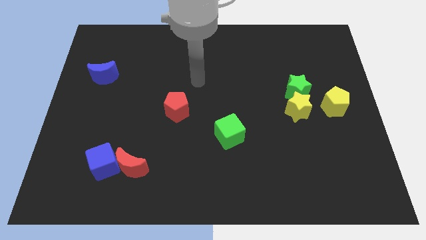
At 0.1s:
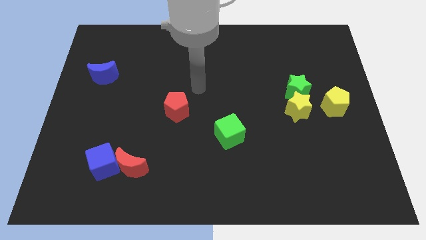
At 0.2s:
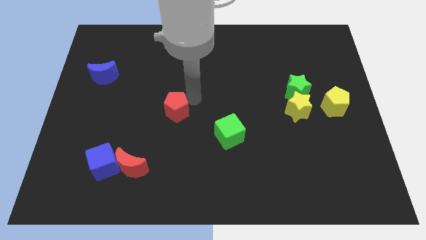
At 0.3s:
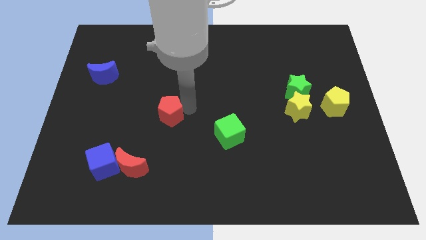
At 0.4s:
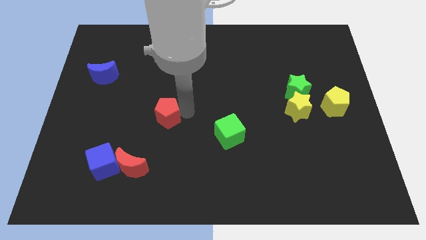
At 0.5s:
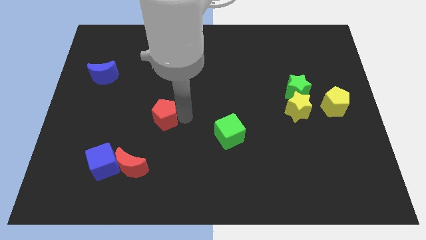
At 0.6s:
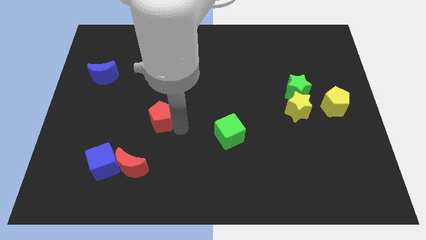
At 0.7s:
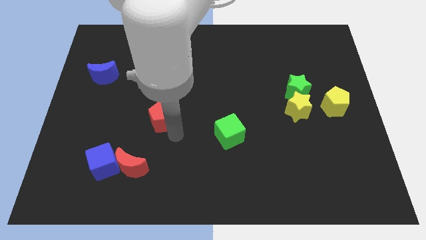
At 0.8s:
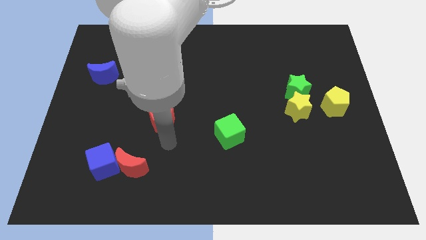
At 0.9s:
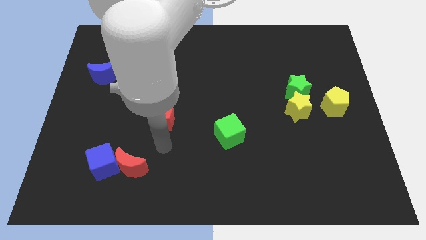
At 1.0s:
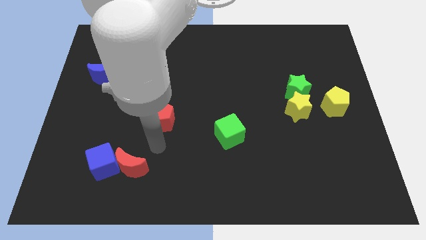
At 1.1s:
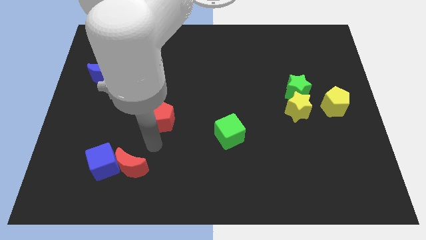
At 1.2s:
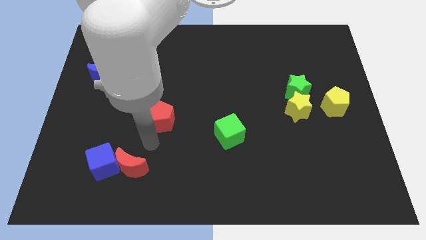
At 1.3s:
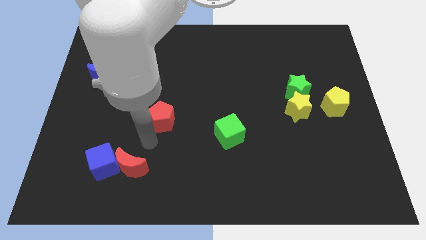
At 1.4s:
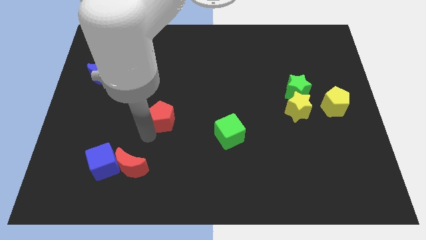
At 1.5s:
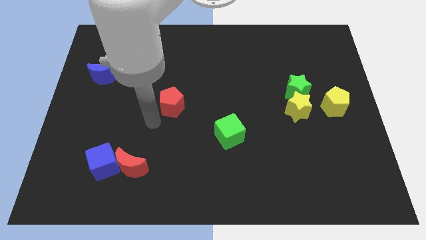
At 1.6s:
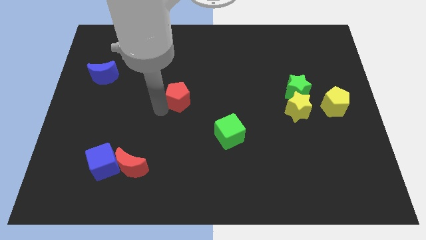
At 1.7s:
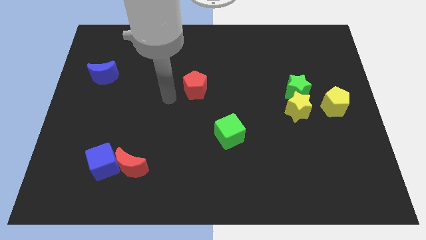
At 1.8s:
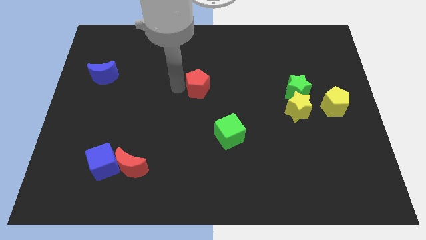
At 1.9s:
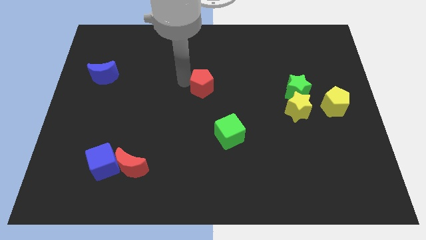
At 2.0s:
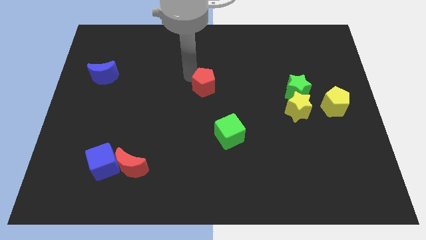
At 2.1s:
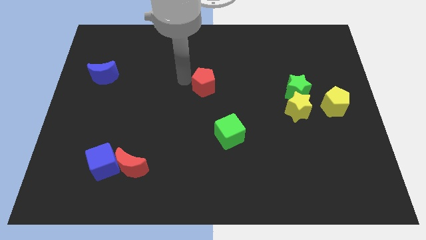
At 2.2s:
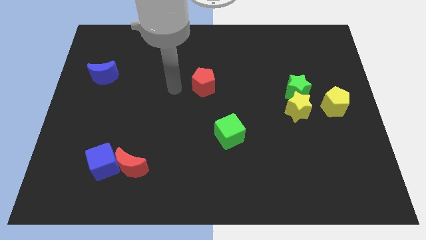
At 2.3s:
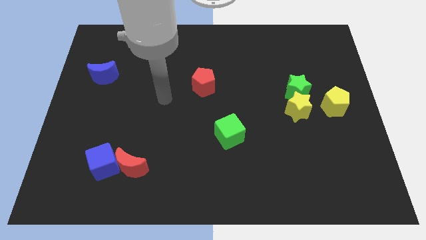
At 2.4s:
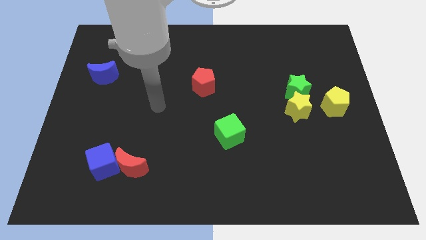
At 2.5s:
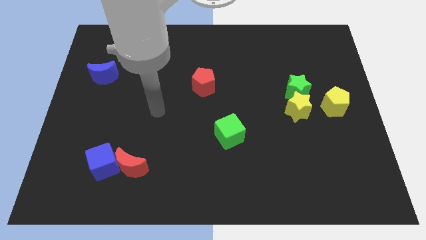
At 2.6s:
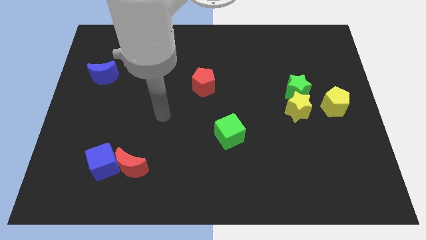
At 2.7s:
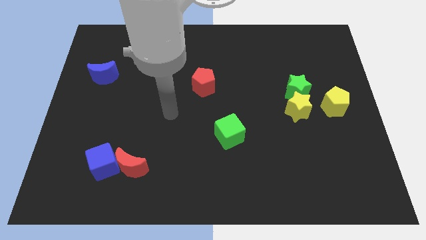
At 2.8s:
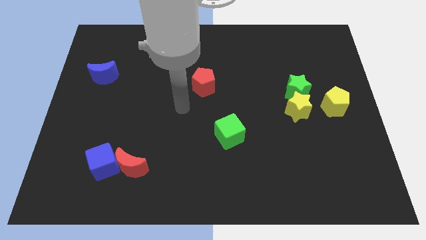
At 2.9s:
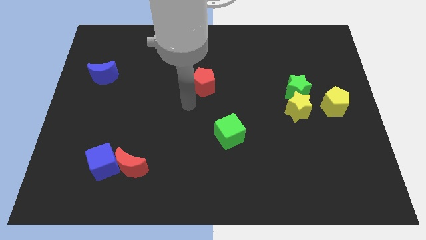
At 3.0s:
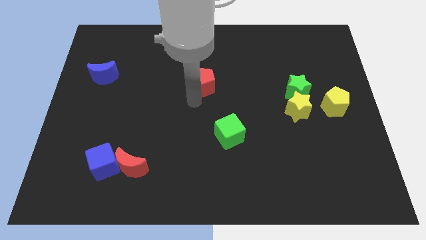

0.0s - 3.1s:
place the red pentagon at the center of the board

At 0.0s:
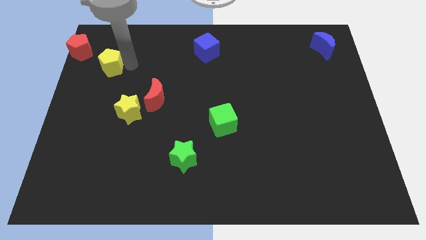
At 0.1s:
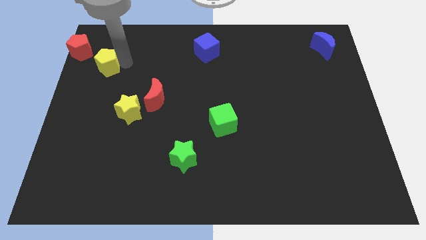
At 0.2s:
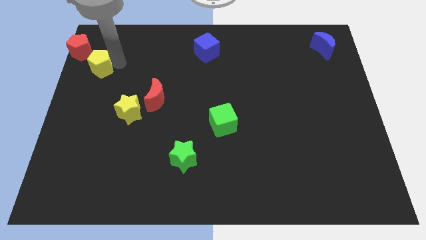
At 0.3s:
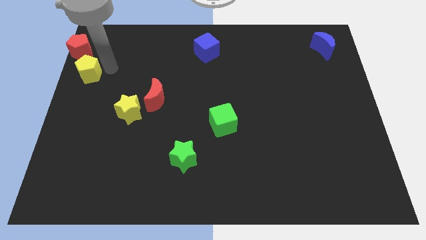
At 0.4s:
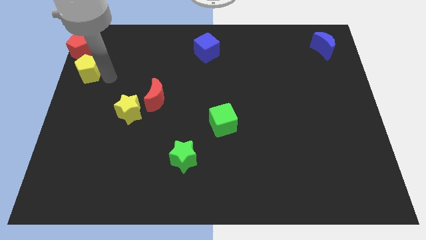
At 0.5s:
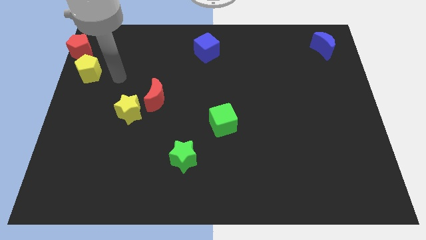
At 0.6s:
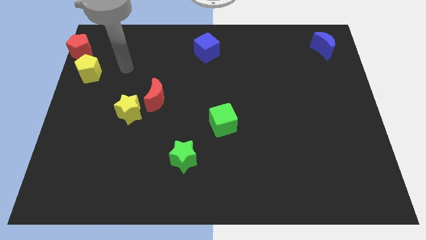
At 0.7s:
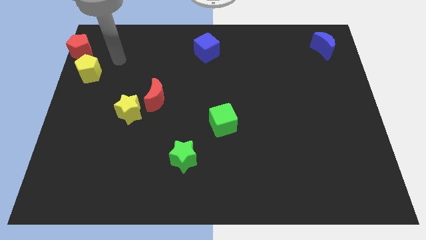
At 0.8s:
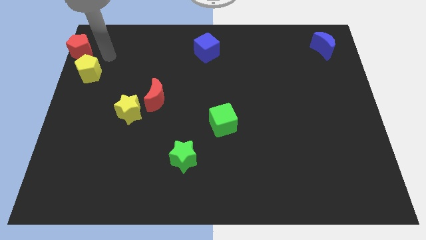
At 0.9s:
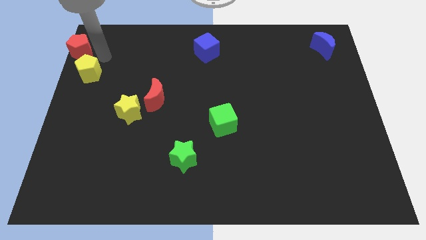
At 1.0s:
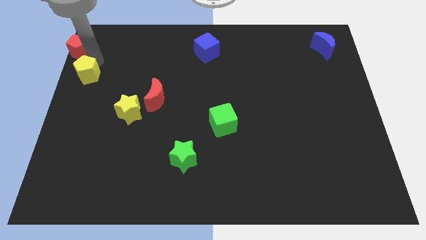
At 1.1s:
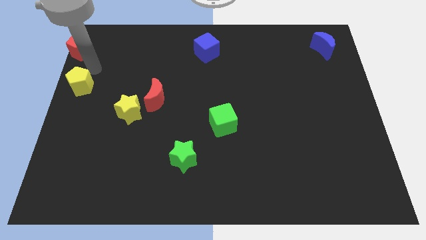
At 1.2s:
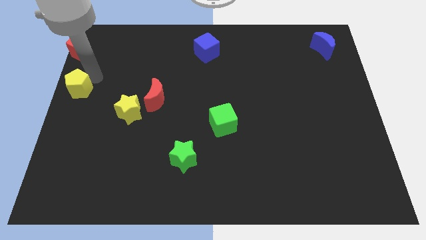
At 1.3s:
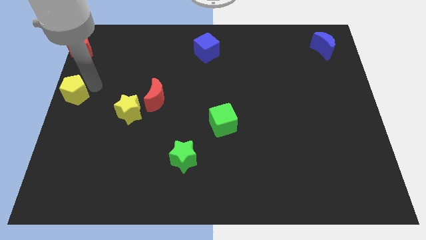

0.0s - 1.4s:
slide the yellow pentagon to the bottom of the red pentagon

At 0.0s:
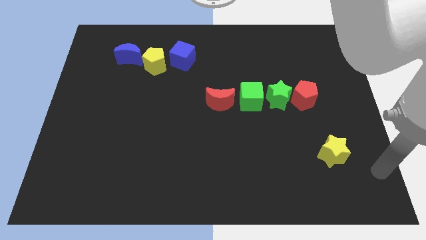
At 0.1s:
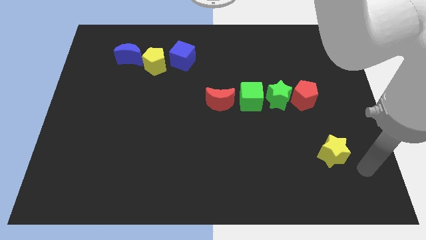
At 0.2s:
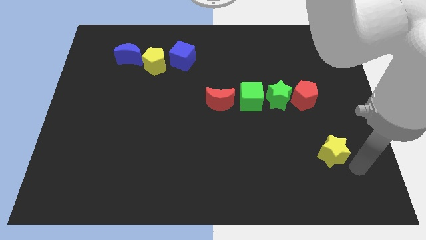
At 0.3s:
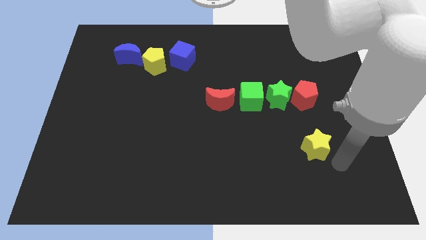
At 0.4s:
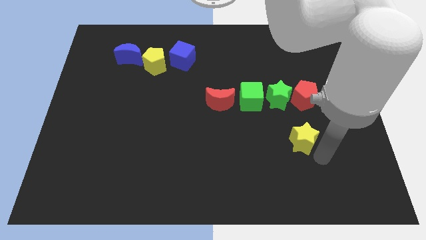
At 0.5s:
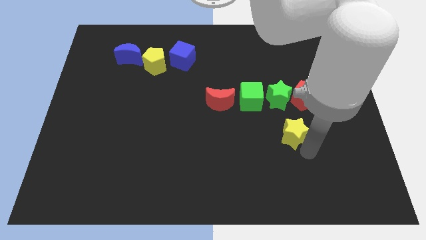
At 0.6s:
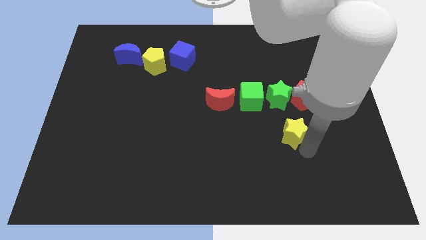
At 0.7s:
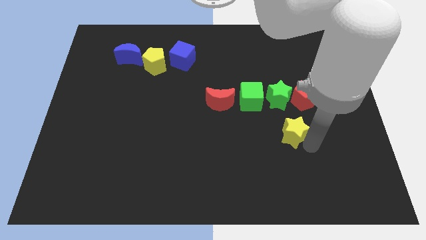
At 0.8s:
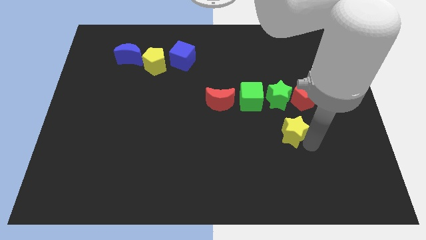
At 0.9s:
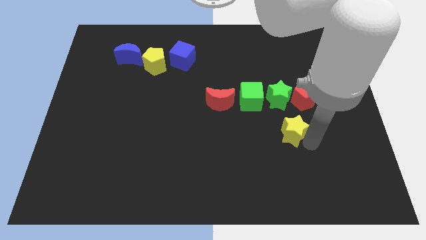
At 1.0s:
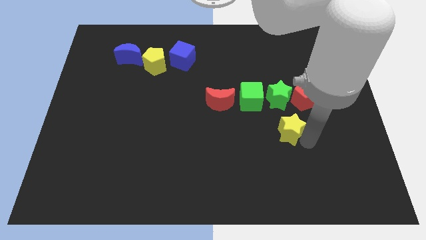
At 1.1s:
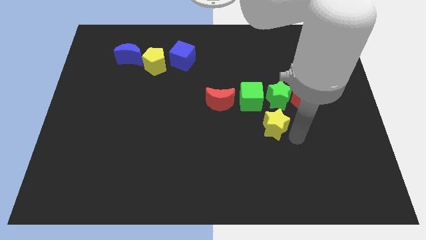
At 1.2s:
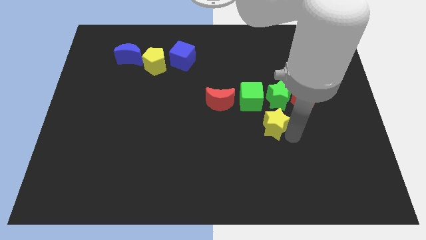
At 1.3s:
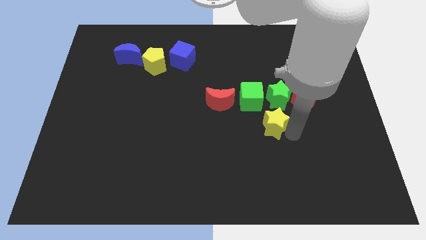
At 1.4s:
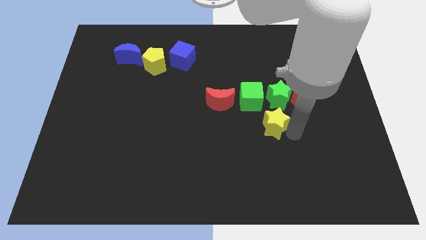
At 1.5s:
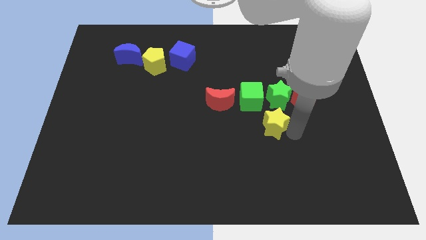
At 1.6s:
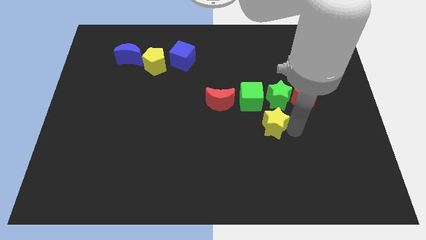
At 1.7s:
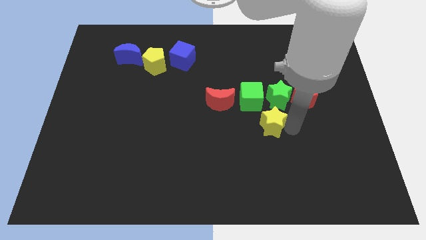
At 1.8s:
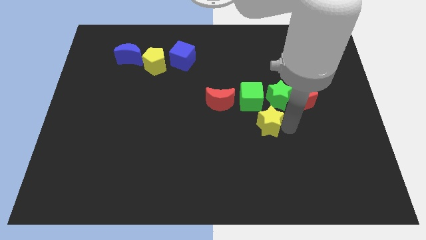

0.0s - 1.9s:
move the yellow star below the green star

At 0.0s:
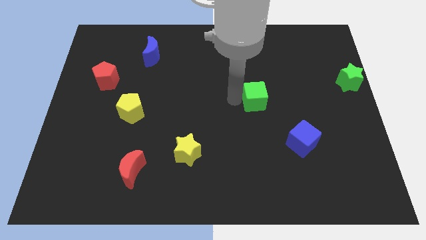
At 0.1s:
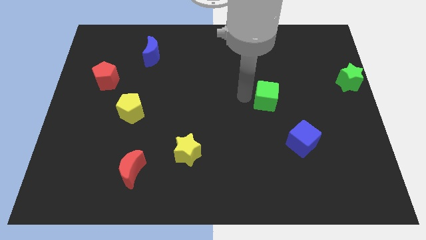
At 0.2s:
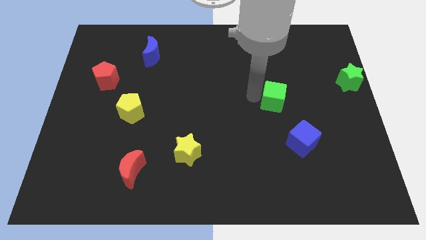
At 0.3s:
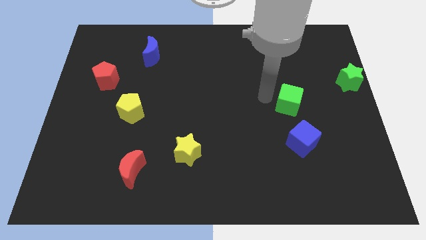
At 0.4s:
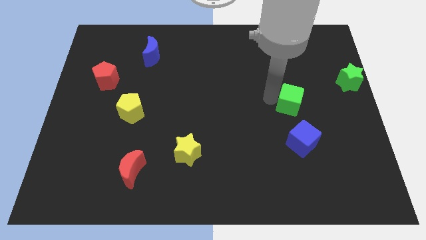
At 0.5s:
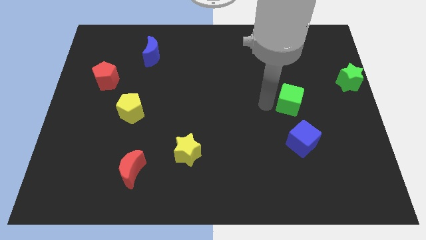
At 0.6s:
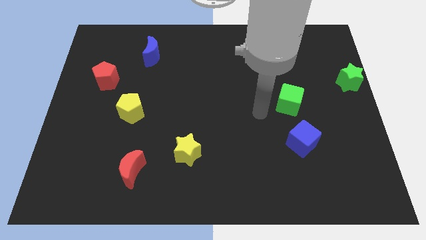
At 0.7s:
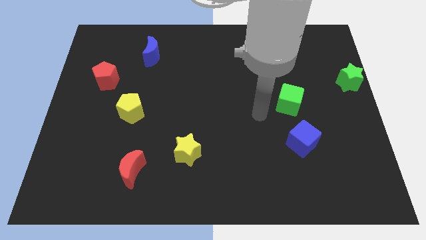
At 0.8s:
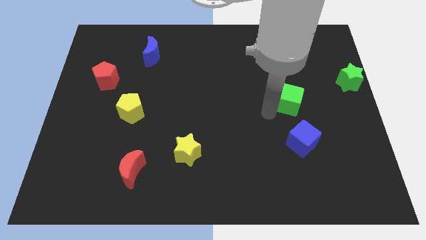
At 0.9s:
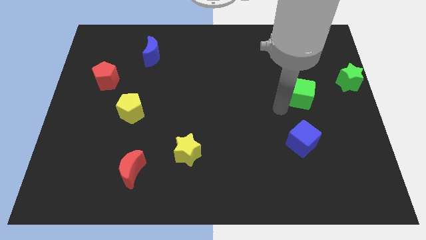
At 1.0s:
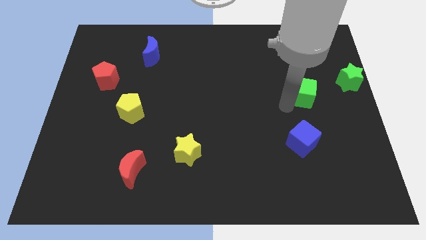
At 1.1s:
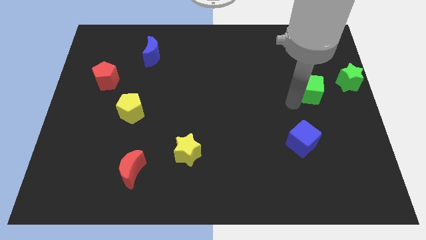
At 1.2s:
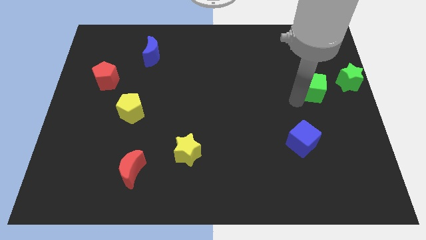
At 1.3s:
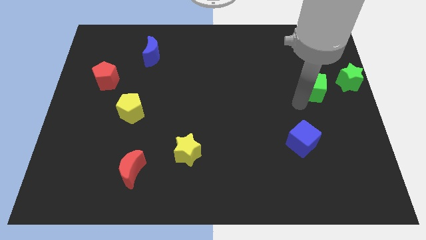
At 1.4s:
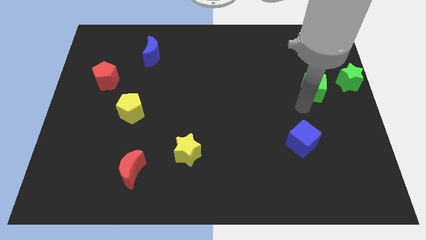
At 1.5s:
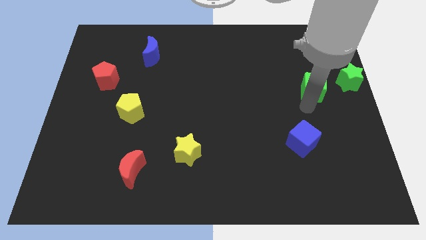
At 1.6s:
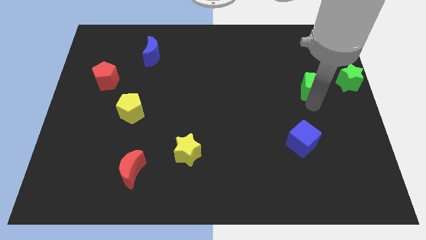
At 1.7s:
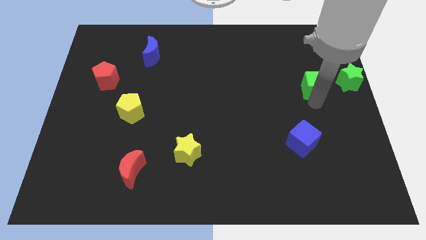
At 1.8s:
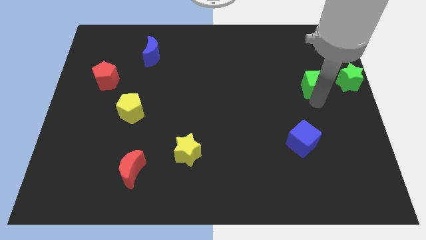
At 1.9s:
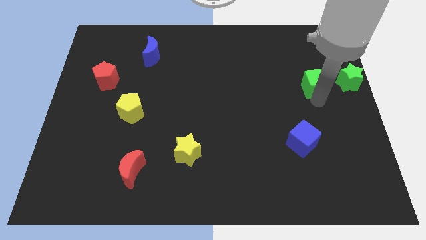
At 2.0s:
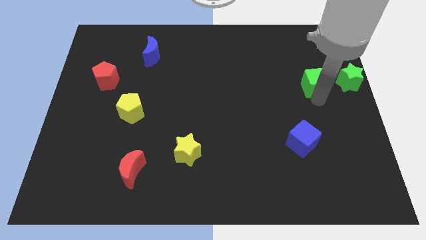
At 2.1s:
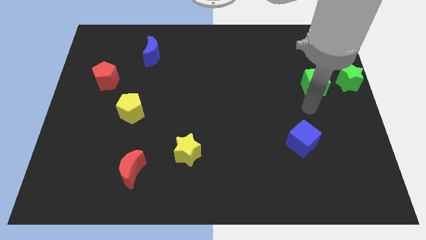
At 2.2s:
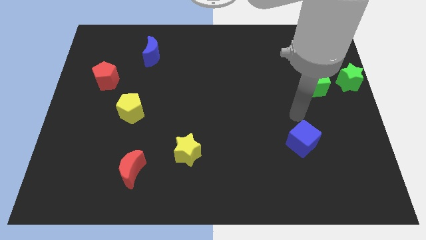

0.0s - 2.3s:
move the green cube to the left of the green star

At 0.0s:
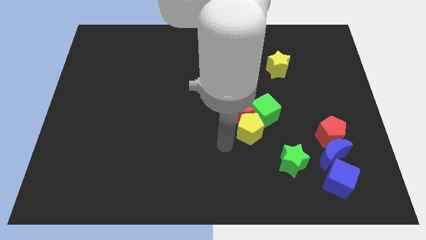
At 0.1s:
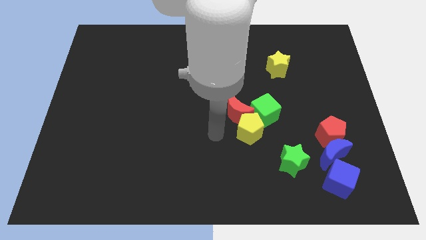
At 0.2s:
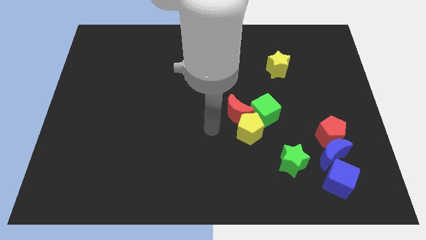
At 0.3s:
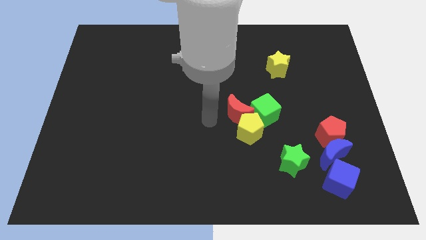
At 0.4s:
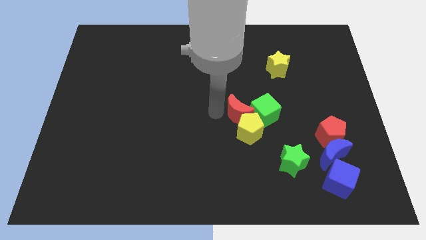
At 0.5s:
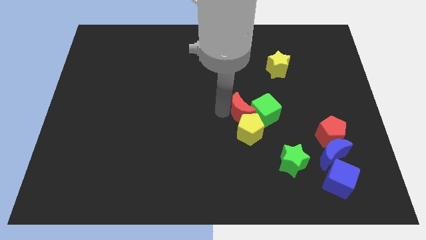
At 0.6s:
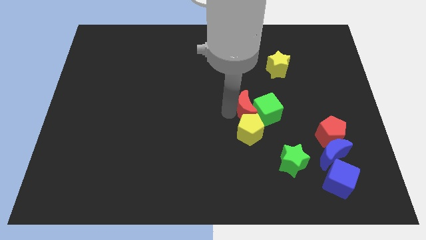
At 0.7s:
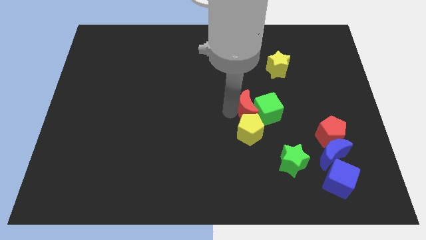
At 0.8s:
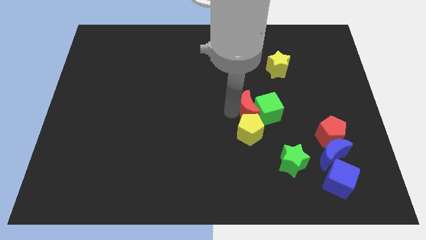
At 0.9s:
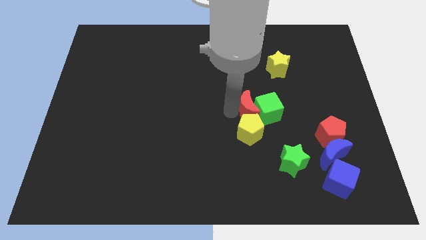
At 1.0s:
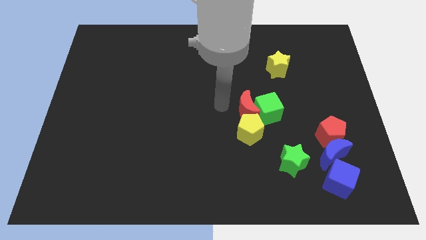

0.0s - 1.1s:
place red moon to the top of yellow pentagon
